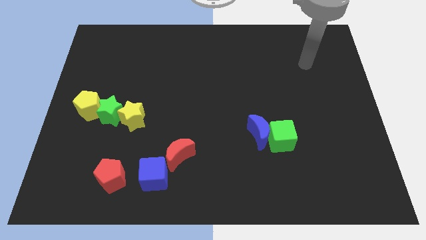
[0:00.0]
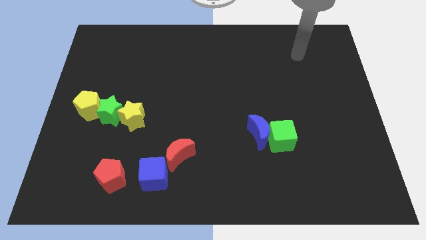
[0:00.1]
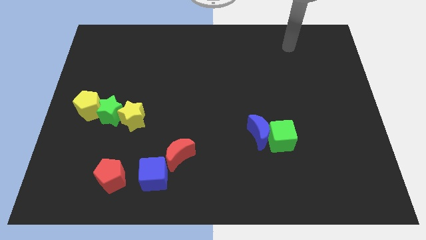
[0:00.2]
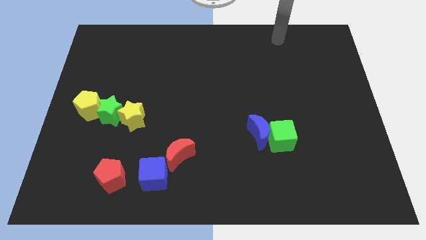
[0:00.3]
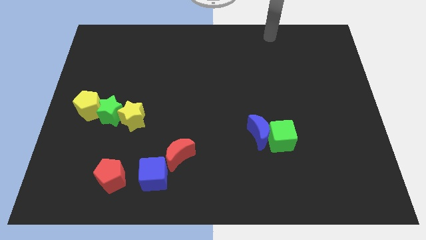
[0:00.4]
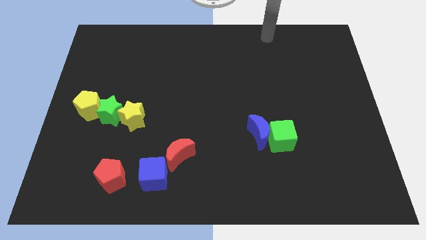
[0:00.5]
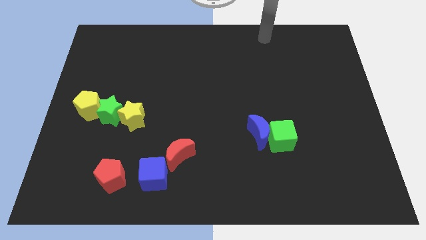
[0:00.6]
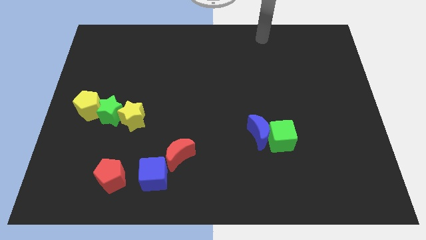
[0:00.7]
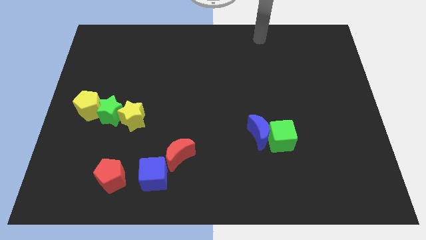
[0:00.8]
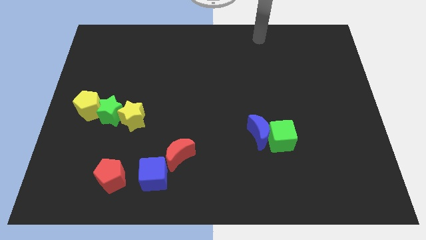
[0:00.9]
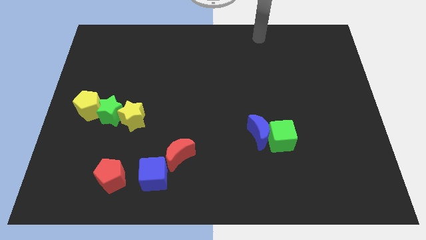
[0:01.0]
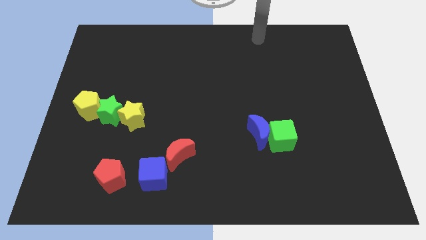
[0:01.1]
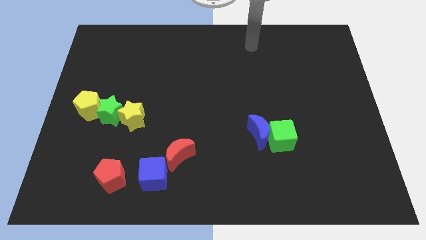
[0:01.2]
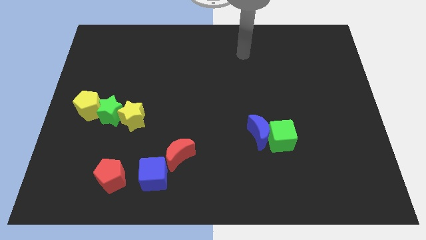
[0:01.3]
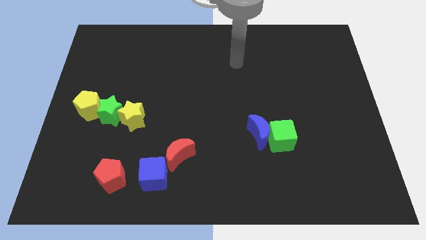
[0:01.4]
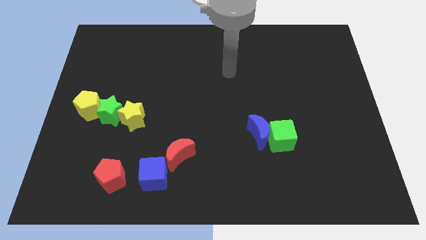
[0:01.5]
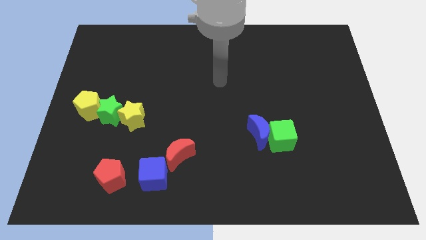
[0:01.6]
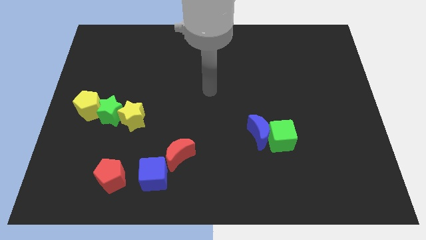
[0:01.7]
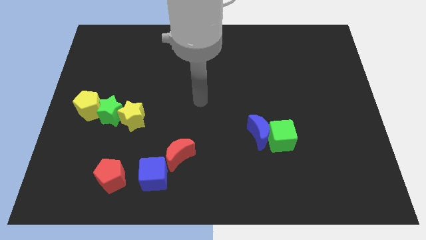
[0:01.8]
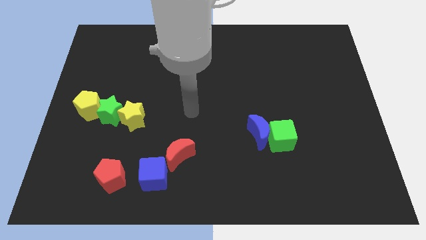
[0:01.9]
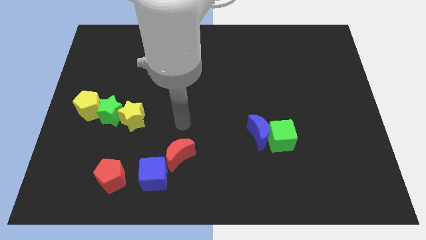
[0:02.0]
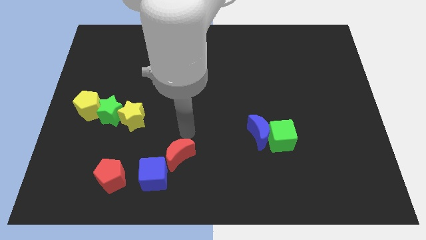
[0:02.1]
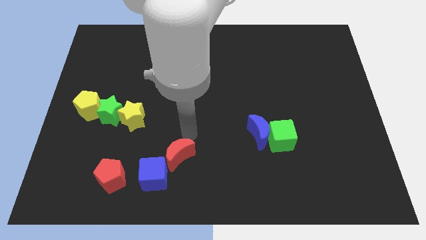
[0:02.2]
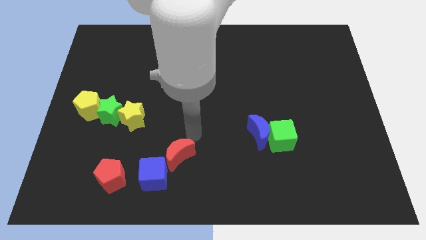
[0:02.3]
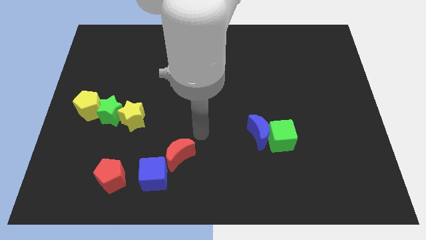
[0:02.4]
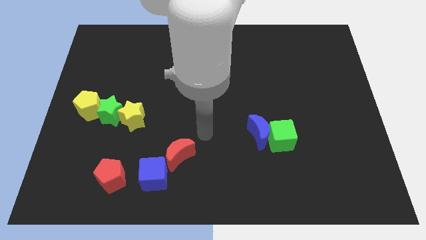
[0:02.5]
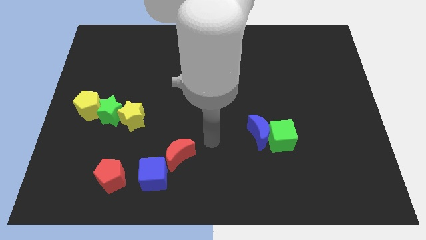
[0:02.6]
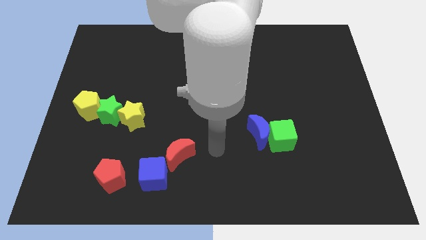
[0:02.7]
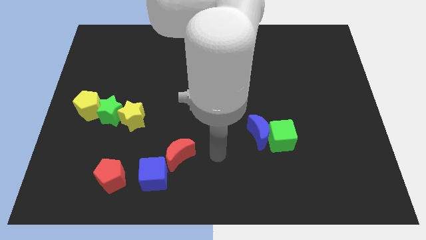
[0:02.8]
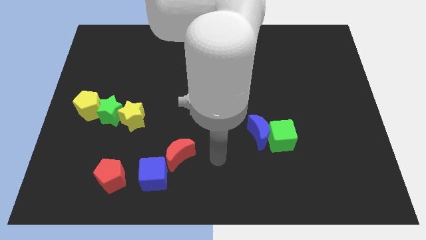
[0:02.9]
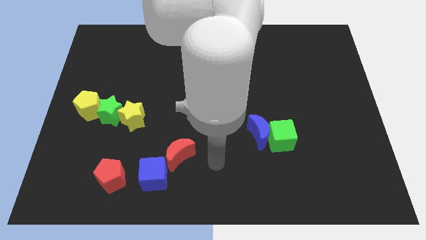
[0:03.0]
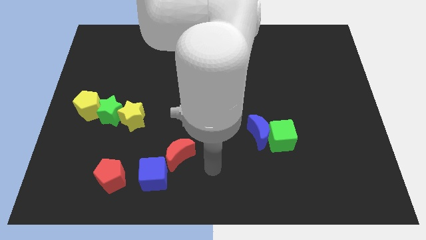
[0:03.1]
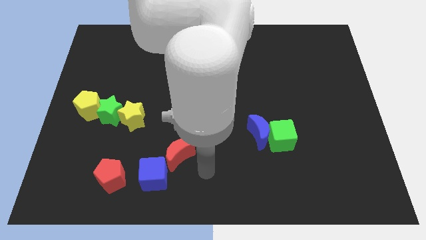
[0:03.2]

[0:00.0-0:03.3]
point your arm at the right of the red crescent

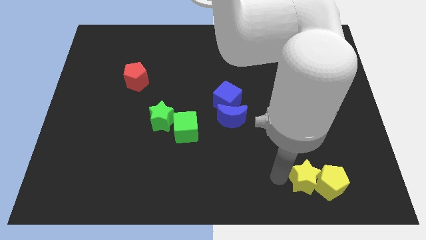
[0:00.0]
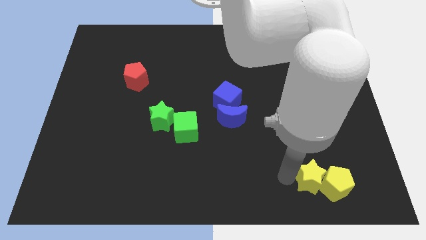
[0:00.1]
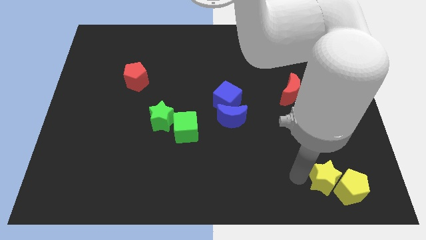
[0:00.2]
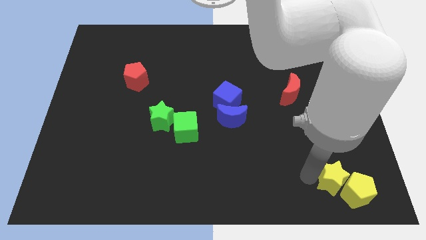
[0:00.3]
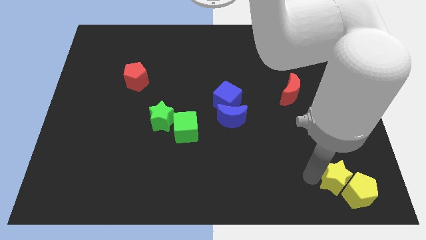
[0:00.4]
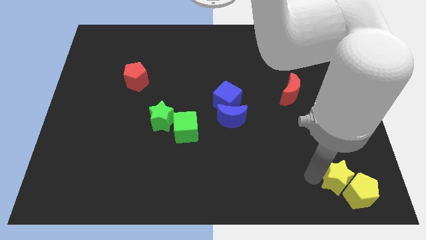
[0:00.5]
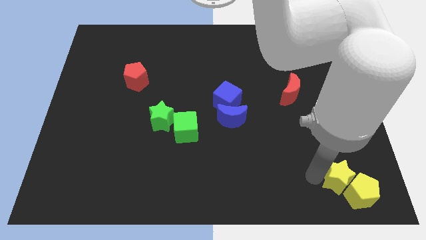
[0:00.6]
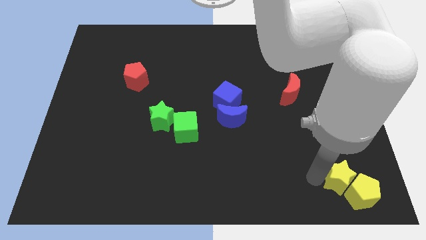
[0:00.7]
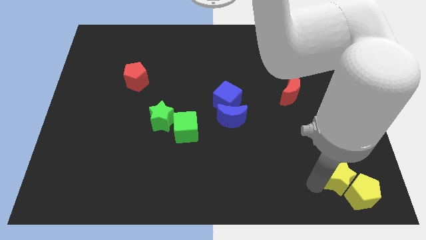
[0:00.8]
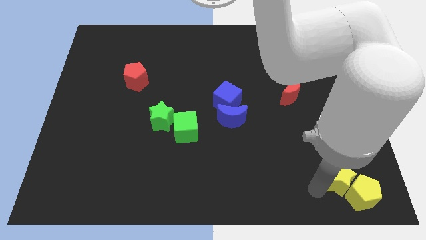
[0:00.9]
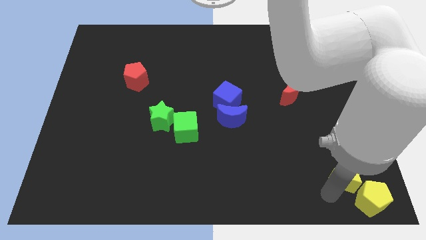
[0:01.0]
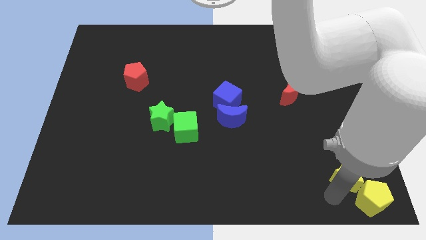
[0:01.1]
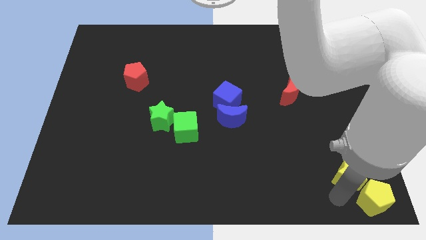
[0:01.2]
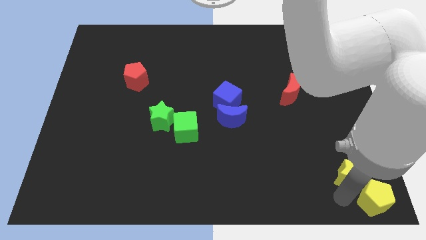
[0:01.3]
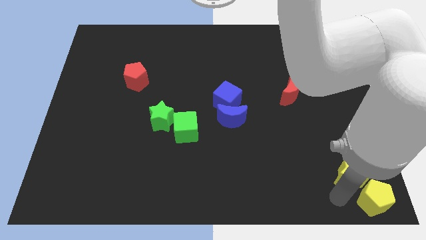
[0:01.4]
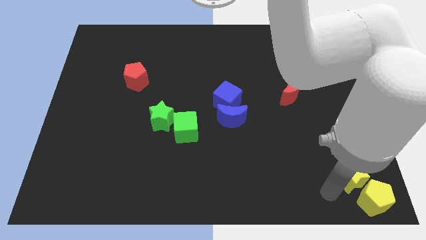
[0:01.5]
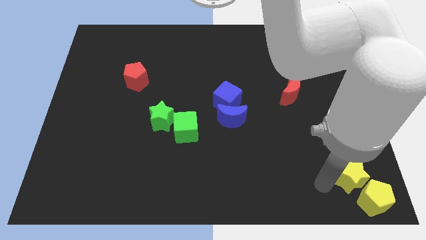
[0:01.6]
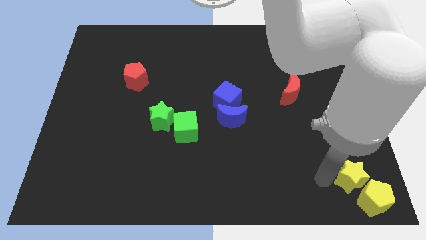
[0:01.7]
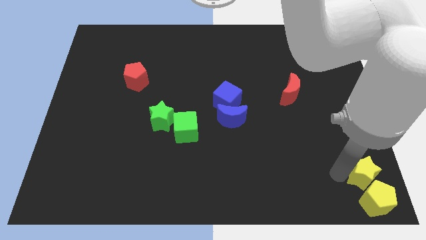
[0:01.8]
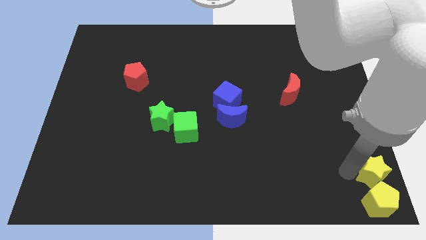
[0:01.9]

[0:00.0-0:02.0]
push the yellow pentagon to the bottom right corner with the yellow star

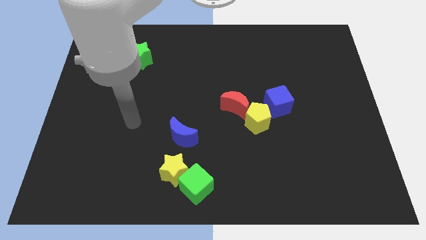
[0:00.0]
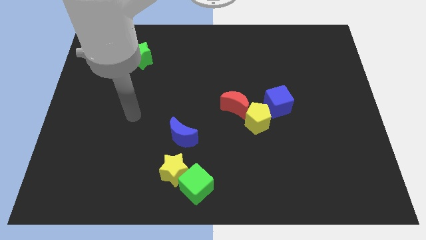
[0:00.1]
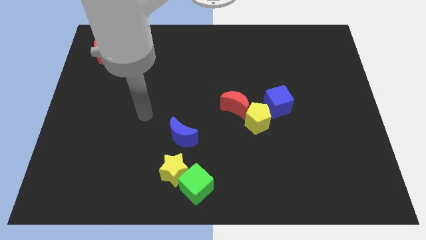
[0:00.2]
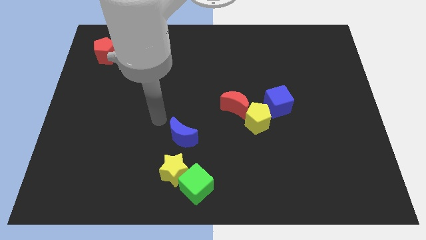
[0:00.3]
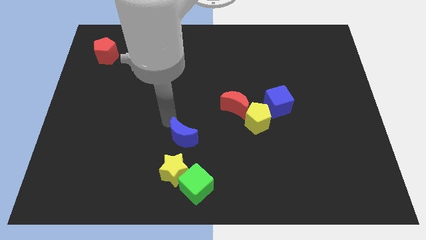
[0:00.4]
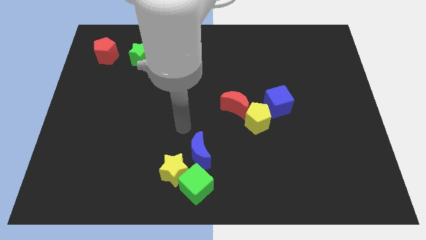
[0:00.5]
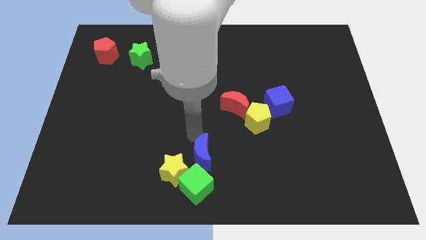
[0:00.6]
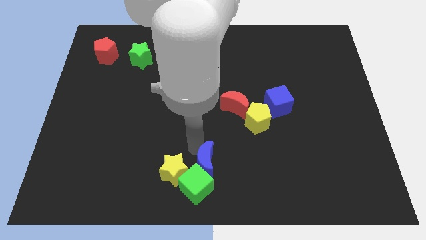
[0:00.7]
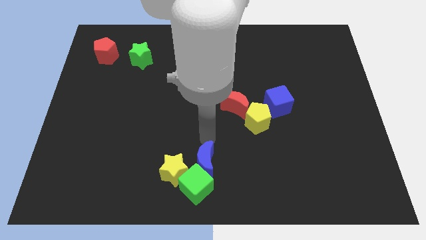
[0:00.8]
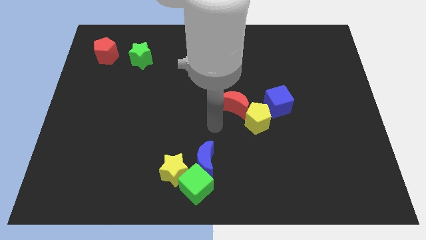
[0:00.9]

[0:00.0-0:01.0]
push blue moon above green cube

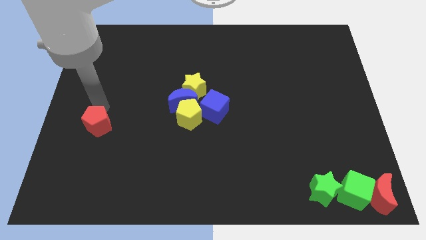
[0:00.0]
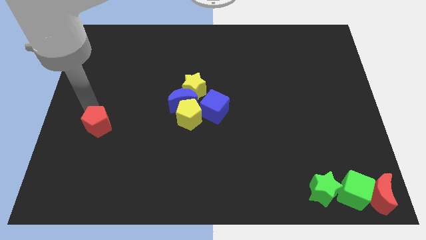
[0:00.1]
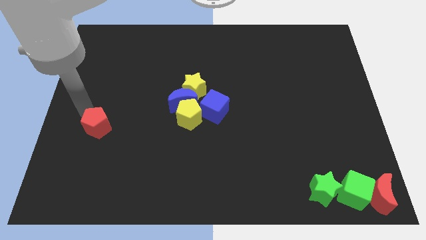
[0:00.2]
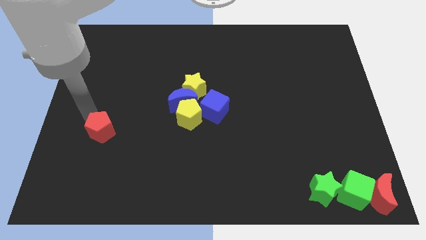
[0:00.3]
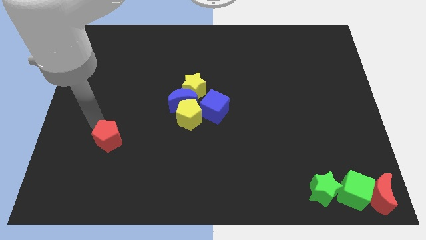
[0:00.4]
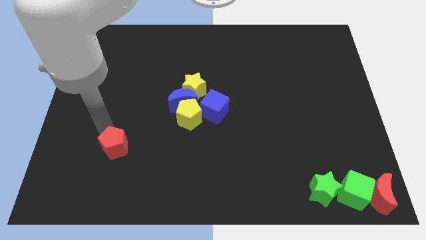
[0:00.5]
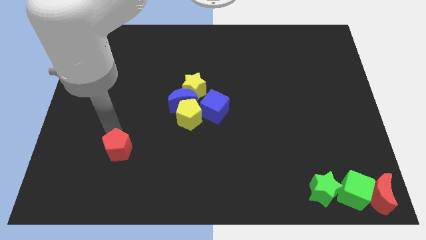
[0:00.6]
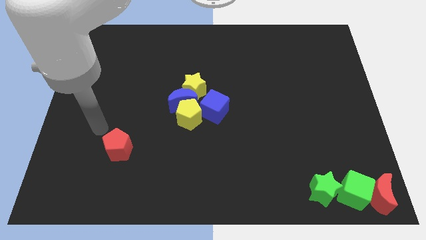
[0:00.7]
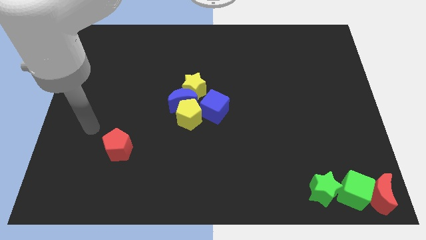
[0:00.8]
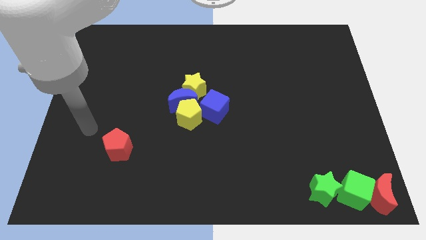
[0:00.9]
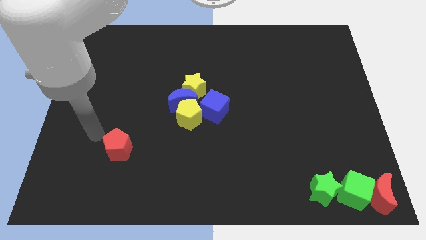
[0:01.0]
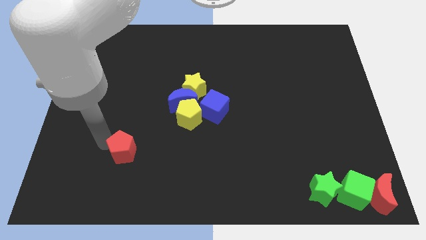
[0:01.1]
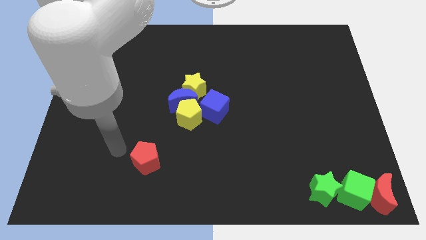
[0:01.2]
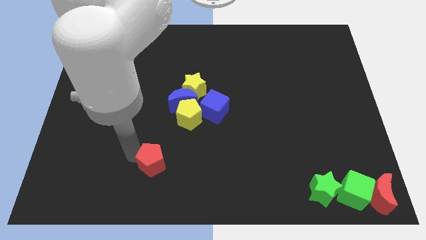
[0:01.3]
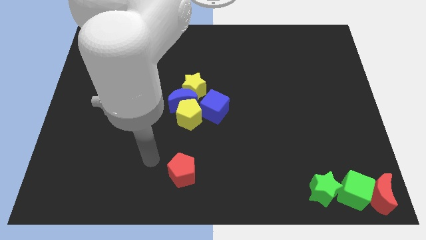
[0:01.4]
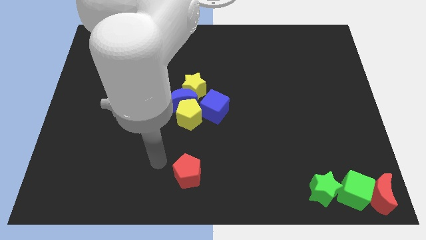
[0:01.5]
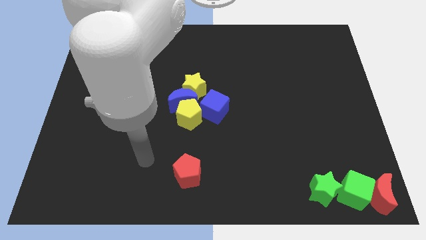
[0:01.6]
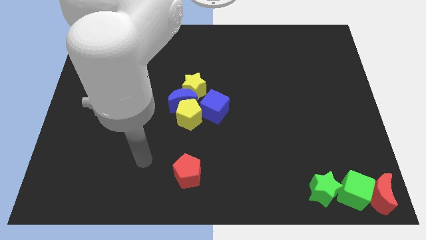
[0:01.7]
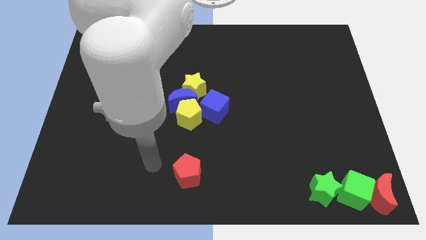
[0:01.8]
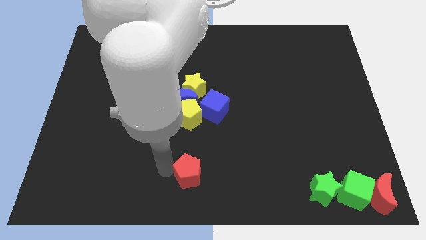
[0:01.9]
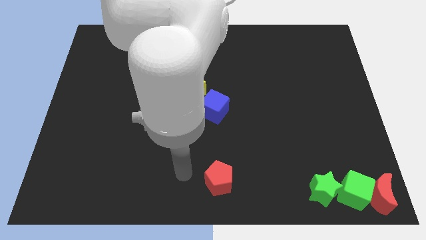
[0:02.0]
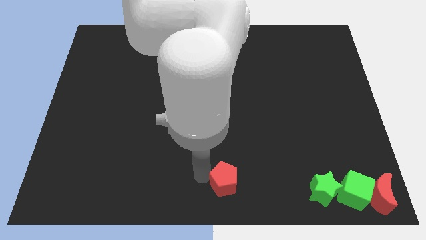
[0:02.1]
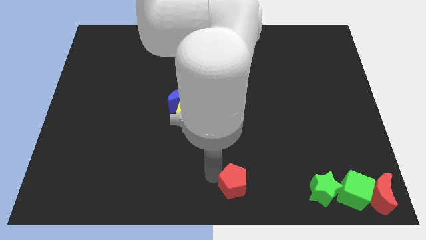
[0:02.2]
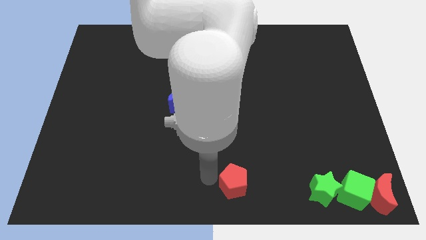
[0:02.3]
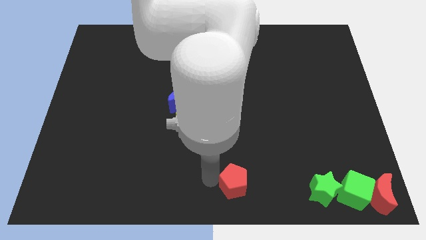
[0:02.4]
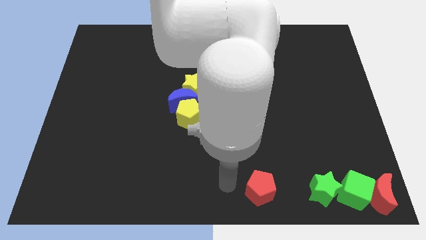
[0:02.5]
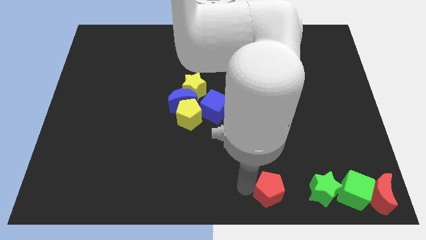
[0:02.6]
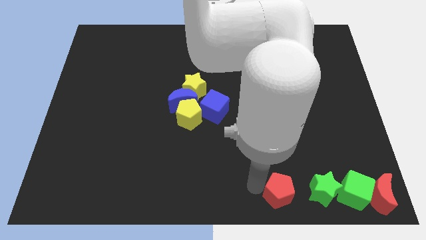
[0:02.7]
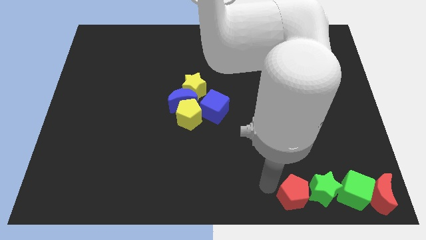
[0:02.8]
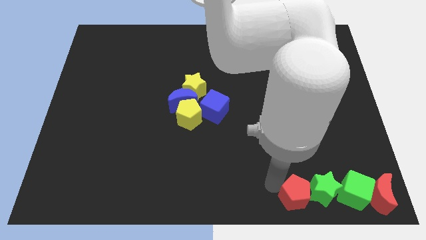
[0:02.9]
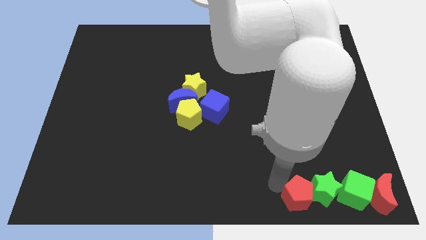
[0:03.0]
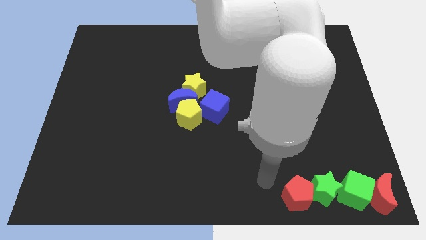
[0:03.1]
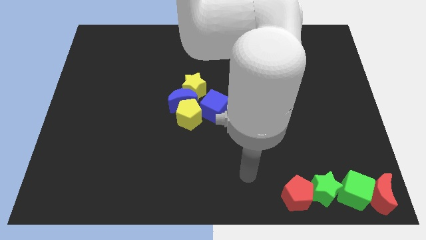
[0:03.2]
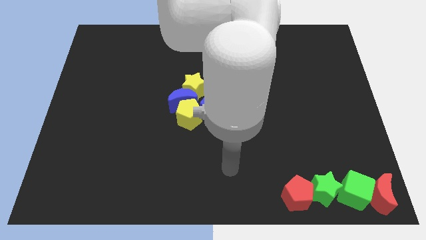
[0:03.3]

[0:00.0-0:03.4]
move the red pentagon to the left of the green star
